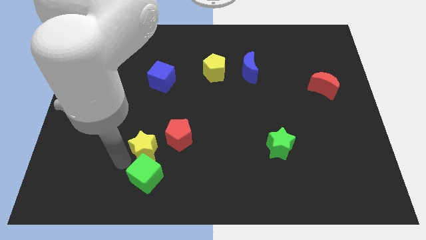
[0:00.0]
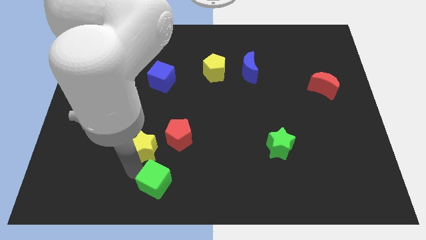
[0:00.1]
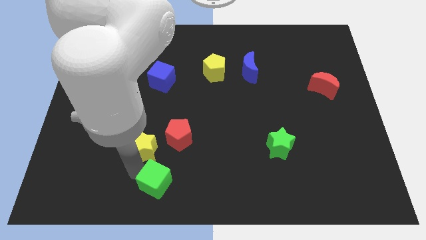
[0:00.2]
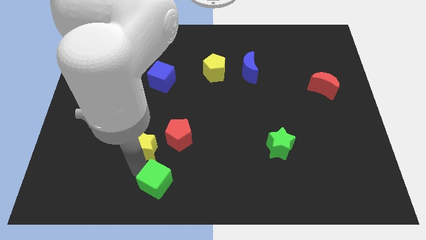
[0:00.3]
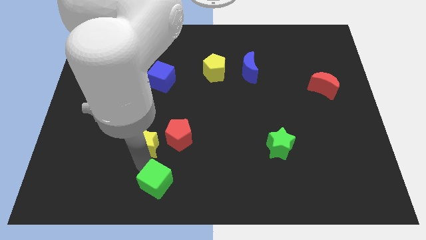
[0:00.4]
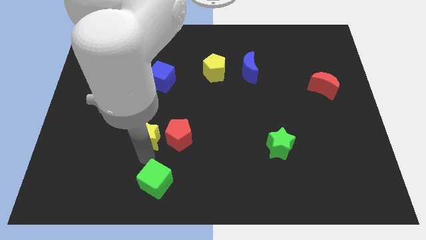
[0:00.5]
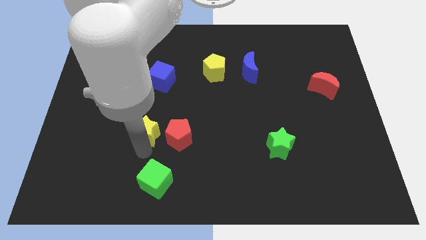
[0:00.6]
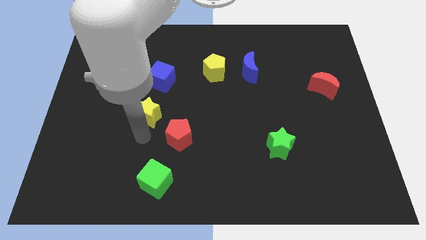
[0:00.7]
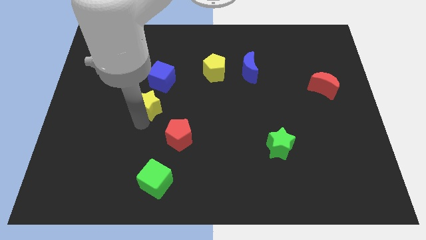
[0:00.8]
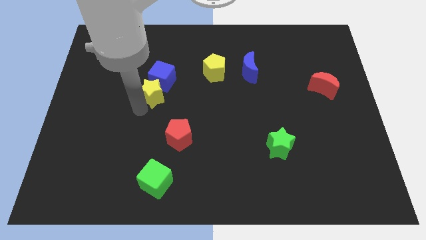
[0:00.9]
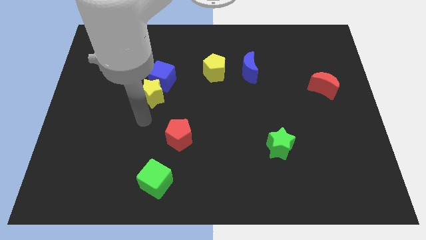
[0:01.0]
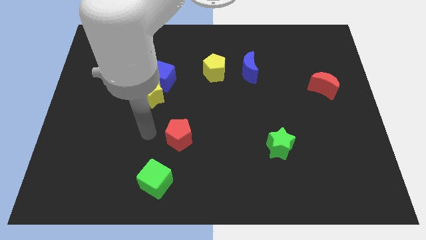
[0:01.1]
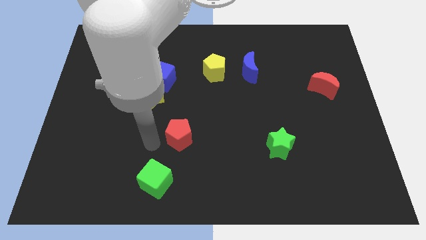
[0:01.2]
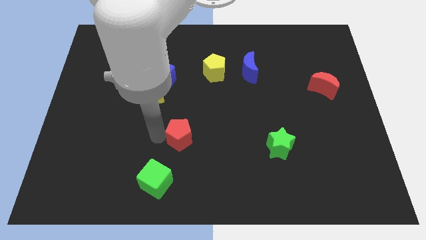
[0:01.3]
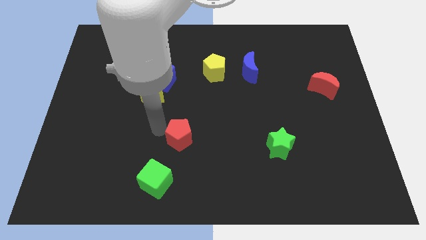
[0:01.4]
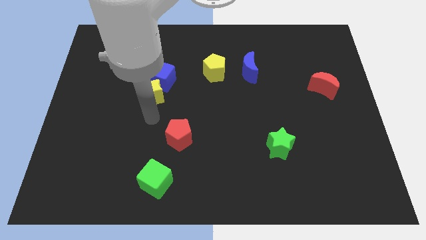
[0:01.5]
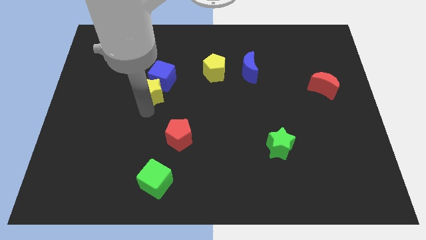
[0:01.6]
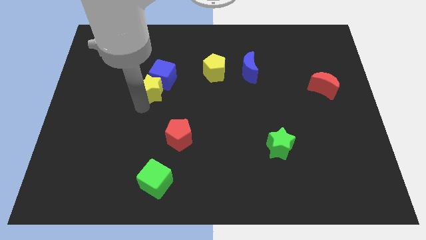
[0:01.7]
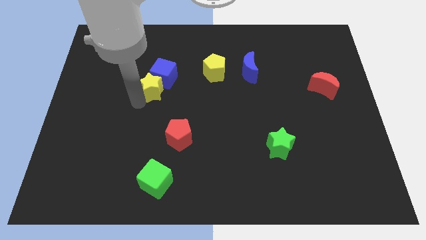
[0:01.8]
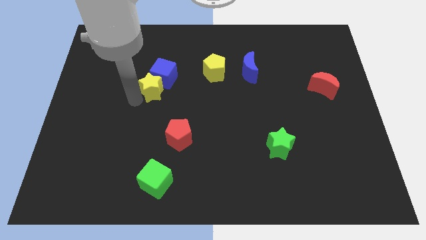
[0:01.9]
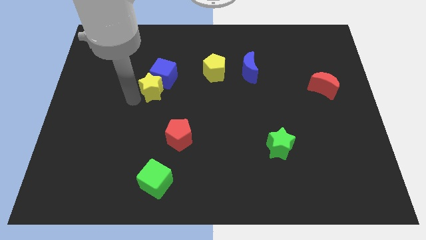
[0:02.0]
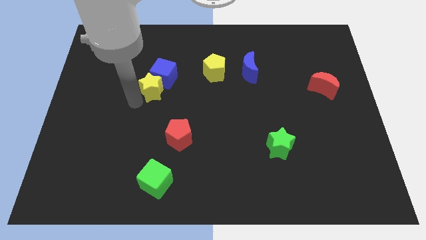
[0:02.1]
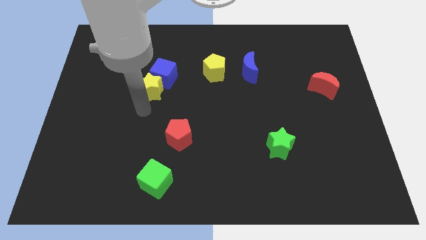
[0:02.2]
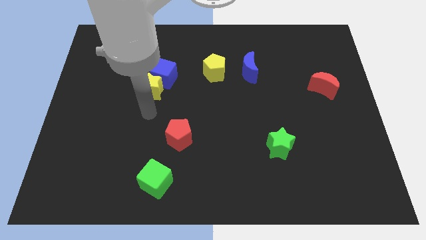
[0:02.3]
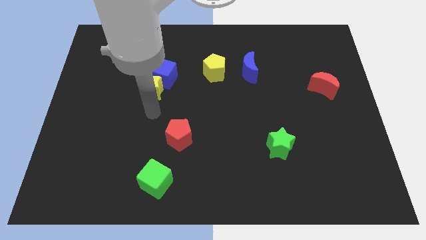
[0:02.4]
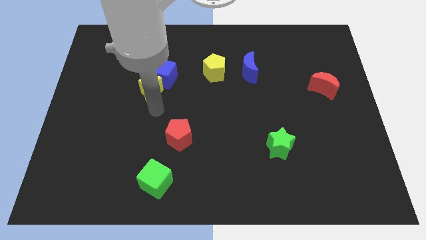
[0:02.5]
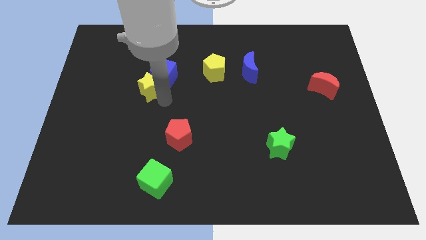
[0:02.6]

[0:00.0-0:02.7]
push the yellow star below the blue cube

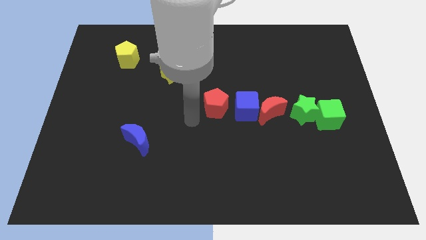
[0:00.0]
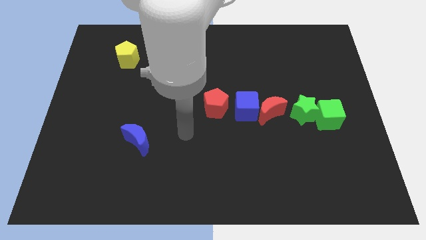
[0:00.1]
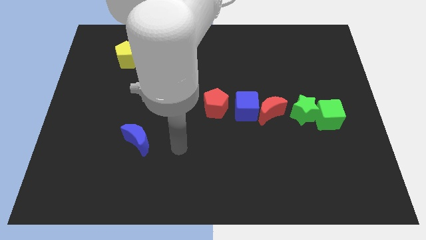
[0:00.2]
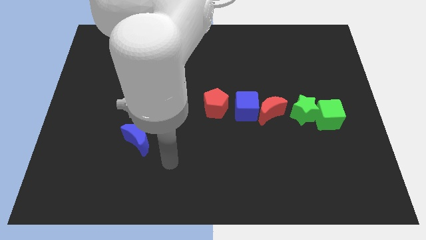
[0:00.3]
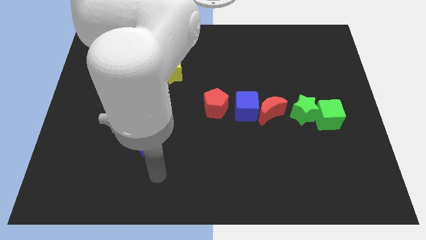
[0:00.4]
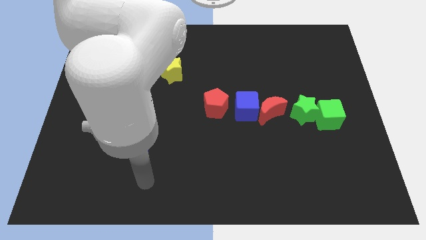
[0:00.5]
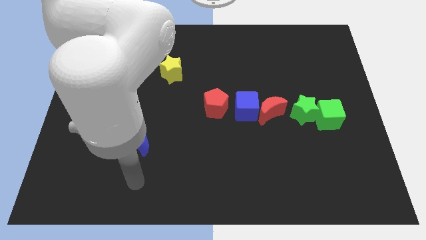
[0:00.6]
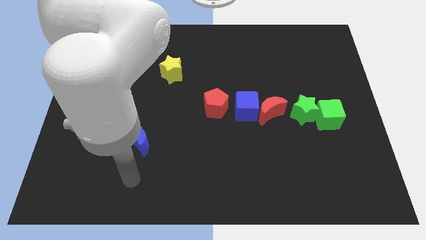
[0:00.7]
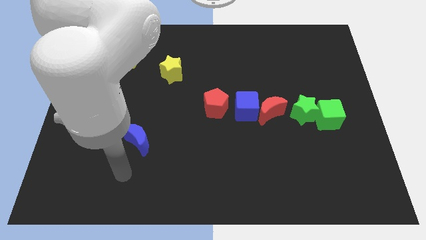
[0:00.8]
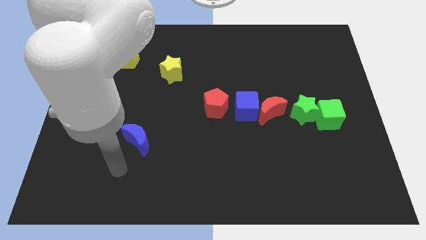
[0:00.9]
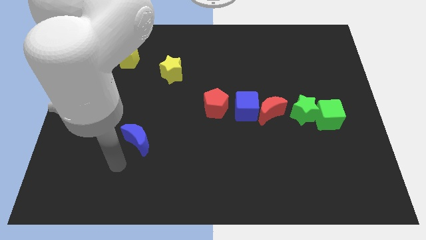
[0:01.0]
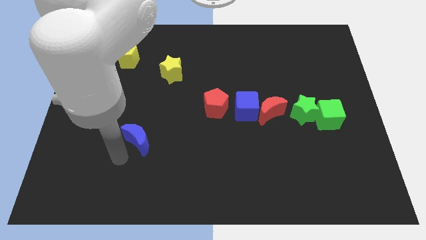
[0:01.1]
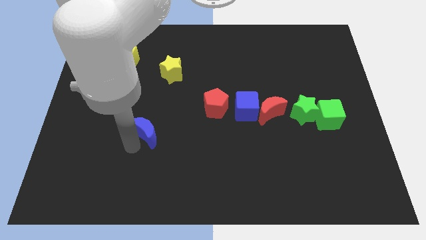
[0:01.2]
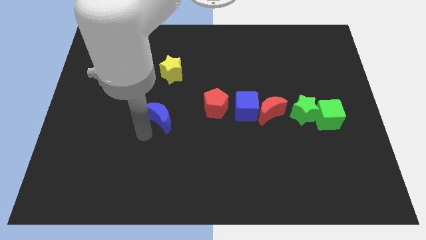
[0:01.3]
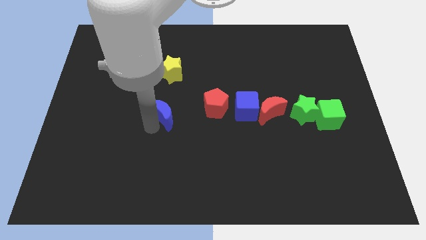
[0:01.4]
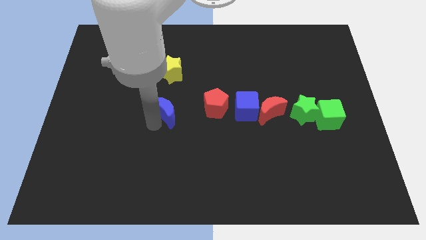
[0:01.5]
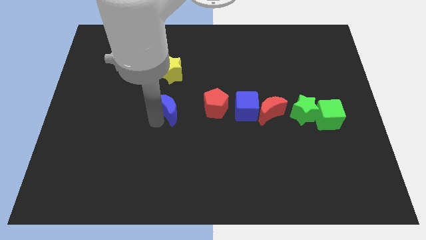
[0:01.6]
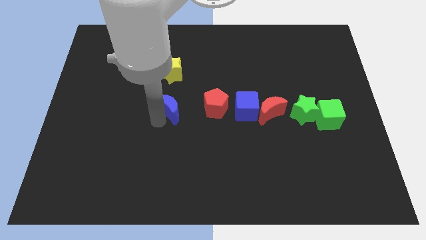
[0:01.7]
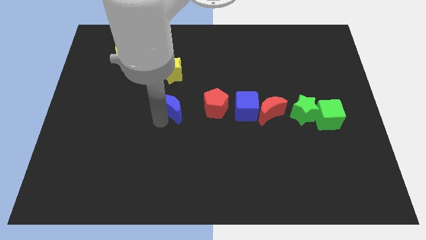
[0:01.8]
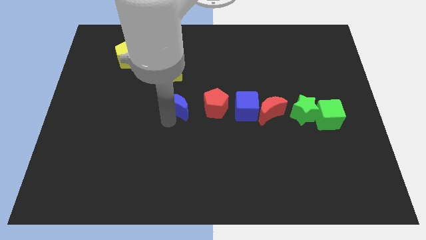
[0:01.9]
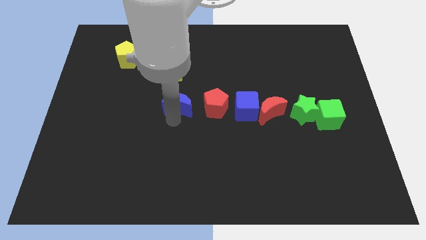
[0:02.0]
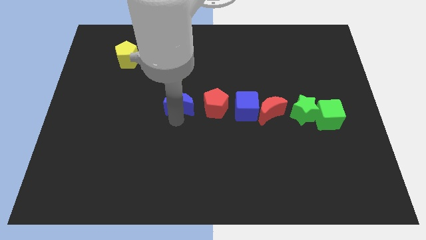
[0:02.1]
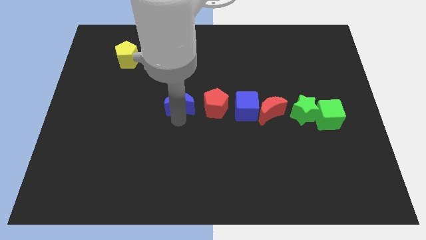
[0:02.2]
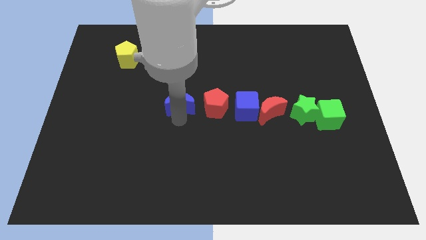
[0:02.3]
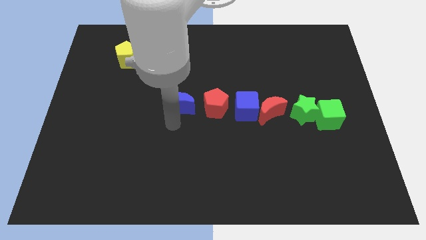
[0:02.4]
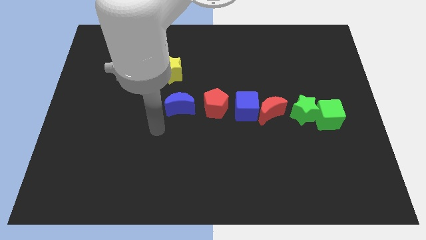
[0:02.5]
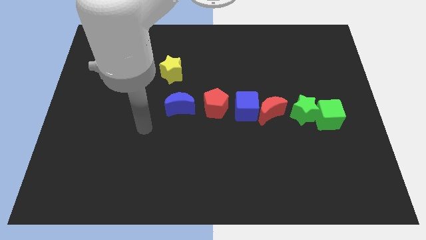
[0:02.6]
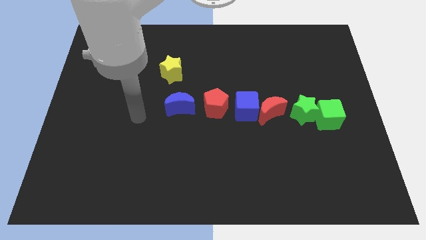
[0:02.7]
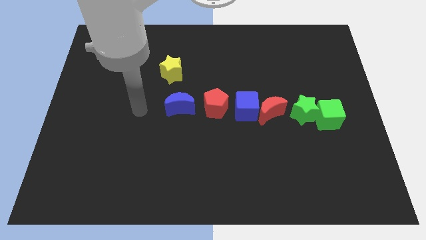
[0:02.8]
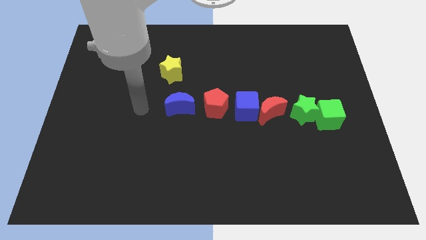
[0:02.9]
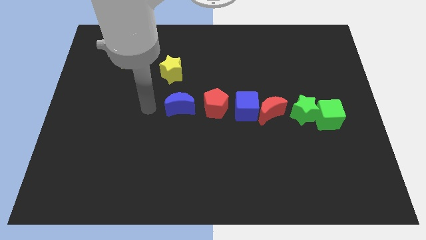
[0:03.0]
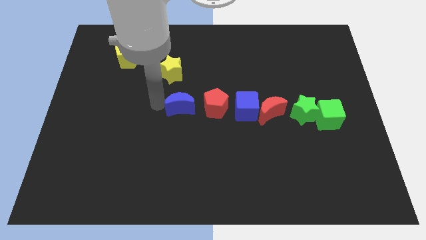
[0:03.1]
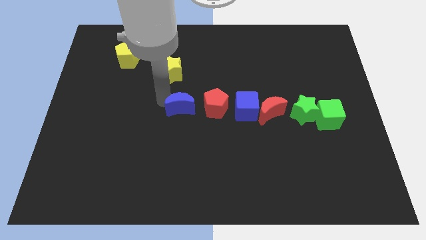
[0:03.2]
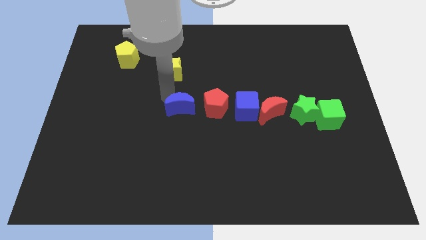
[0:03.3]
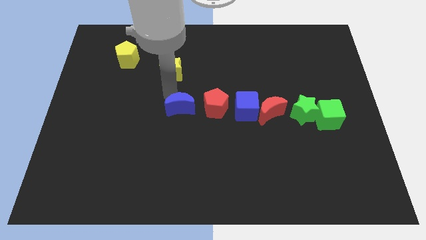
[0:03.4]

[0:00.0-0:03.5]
place the blue crescent left of red pentagon

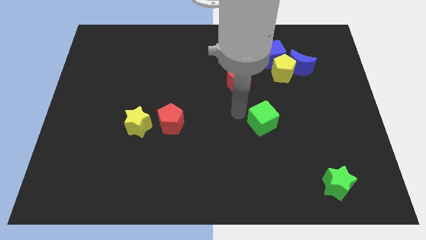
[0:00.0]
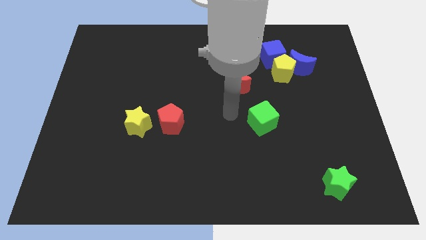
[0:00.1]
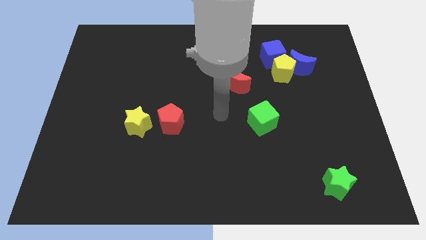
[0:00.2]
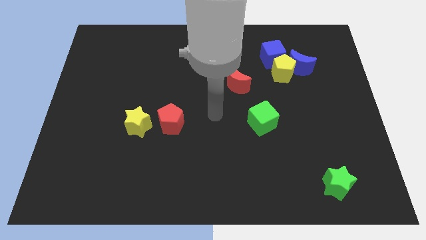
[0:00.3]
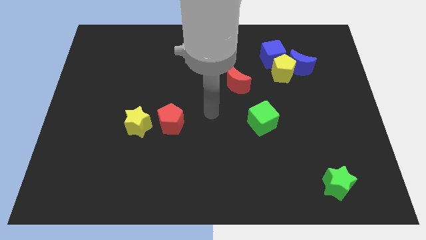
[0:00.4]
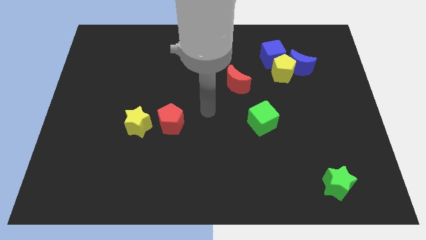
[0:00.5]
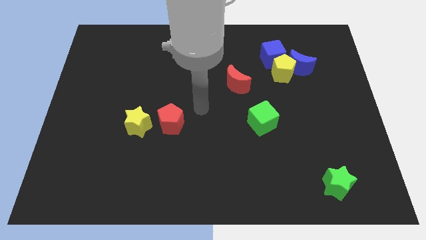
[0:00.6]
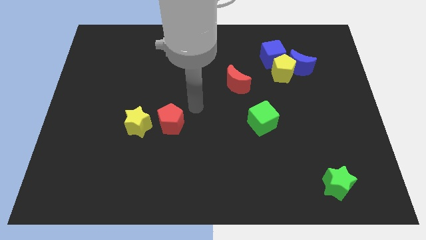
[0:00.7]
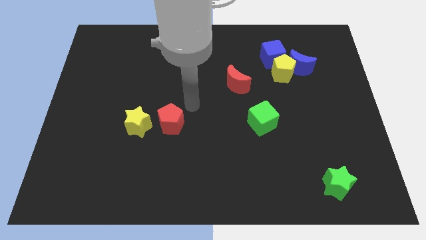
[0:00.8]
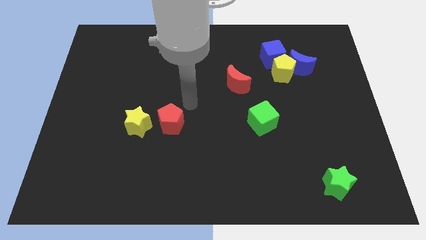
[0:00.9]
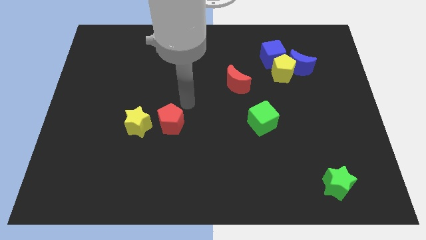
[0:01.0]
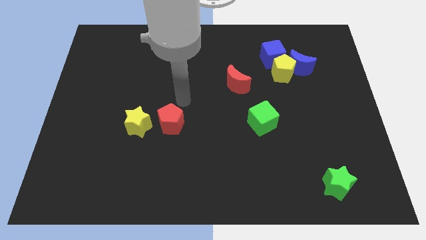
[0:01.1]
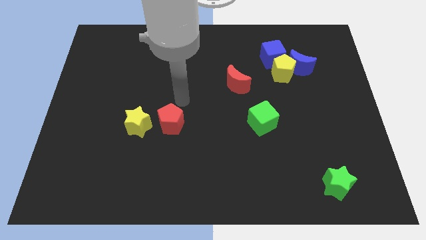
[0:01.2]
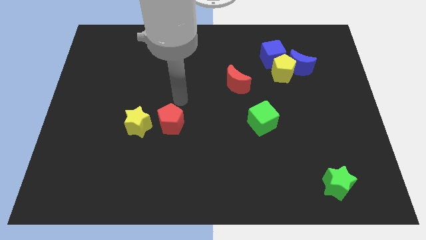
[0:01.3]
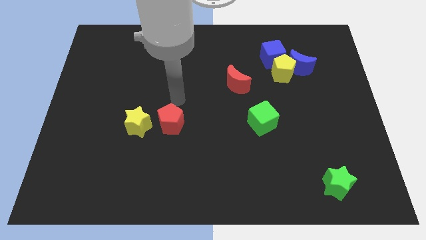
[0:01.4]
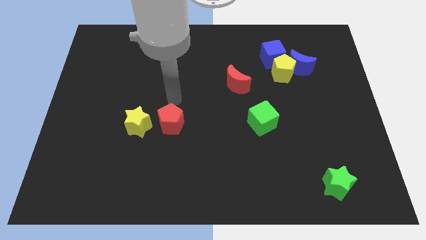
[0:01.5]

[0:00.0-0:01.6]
place your arm at the top of the red pentagon

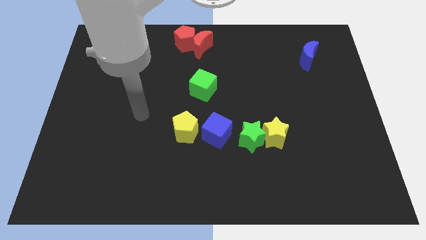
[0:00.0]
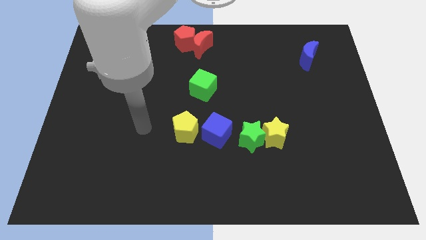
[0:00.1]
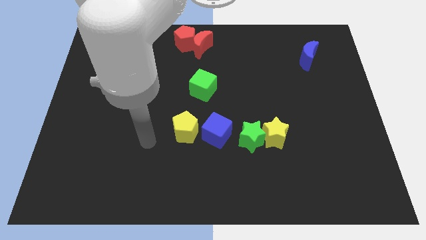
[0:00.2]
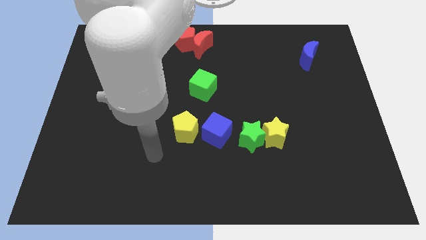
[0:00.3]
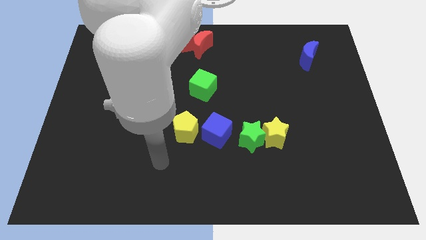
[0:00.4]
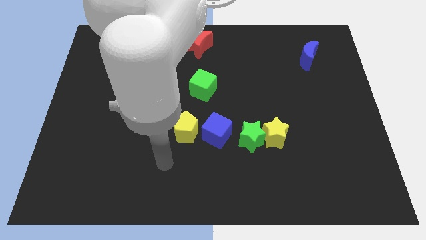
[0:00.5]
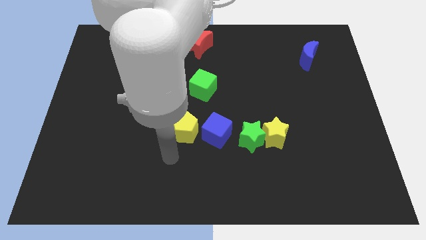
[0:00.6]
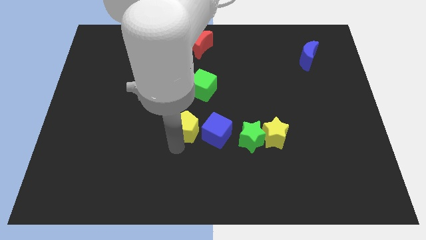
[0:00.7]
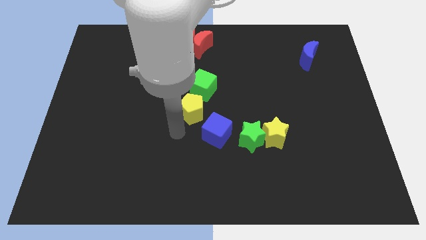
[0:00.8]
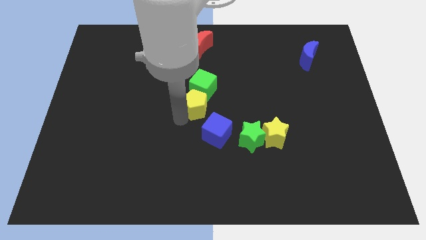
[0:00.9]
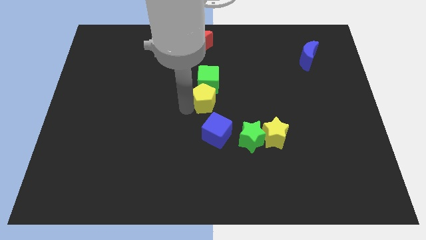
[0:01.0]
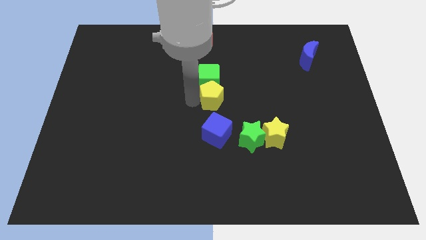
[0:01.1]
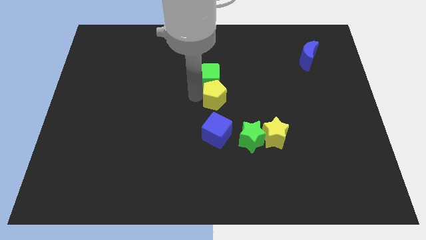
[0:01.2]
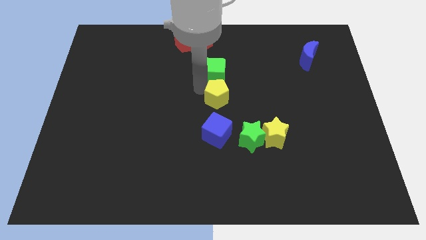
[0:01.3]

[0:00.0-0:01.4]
push the yellow pentagon into the green cube
